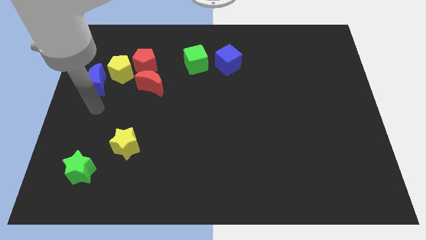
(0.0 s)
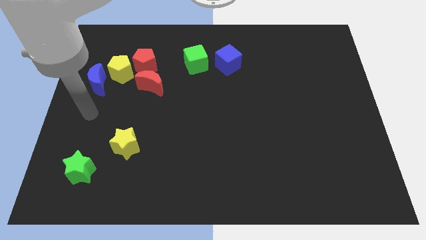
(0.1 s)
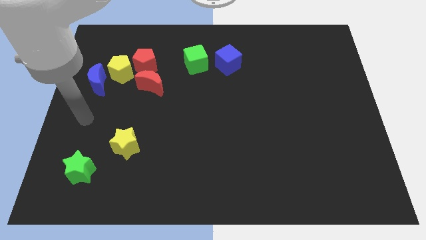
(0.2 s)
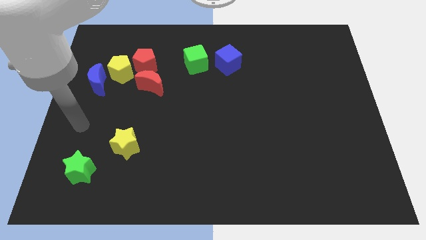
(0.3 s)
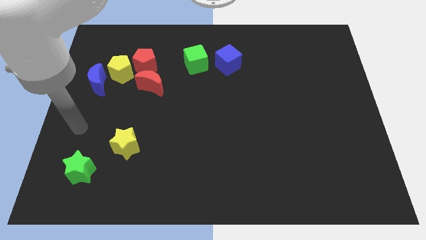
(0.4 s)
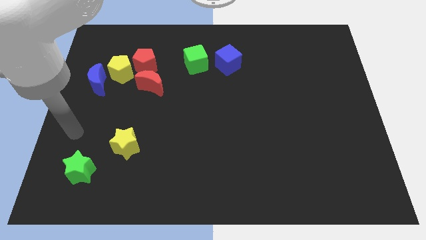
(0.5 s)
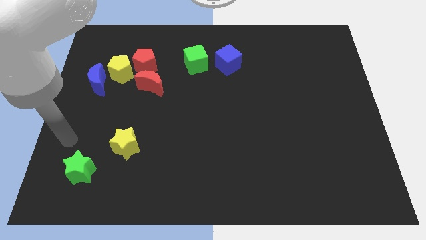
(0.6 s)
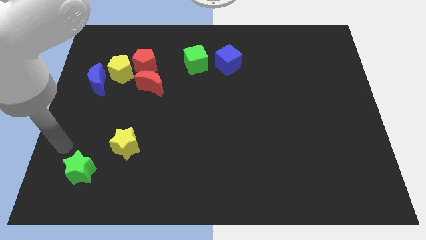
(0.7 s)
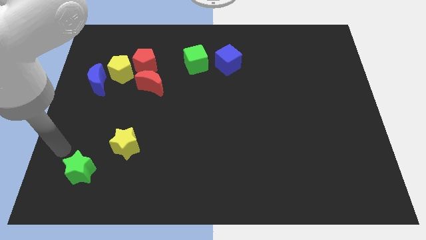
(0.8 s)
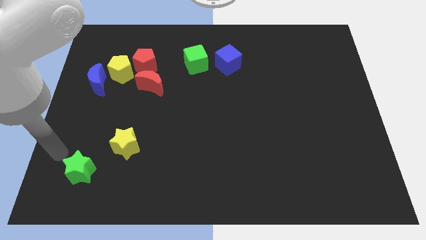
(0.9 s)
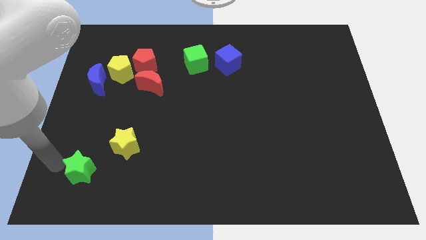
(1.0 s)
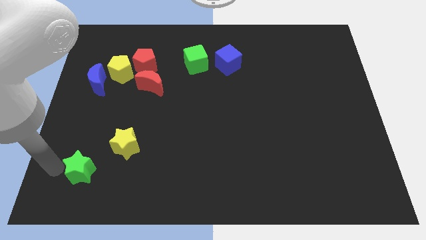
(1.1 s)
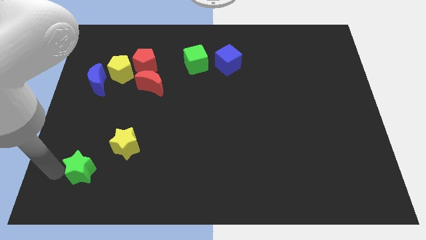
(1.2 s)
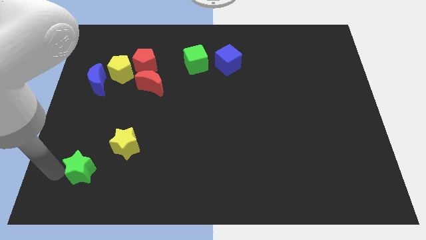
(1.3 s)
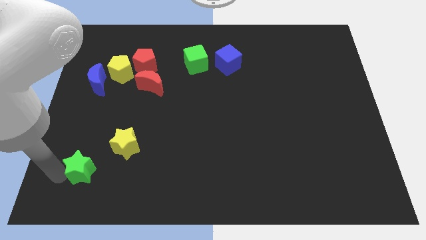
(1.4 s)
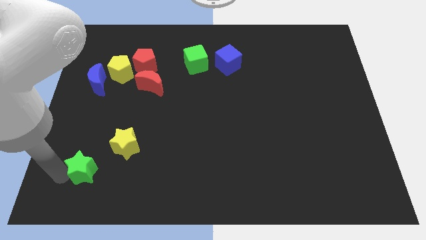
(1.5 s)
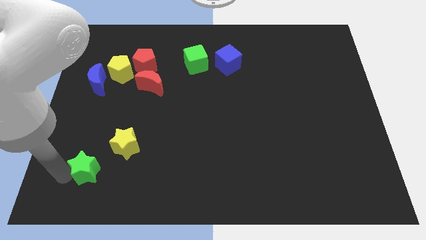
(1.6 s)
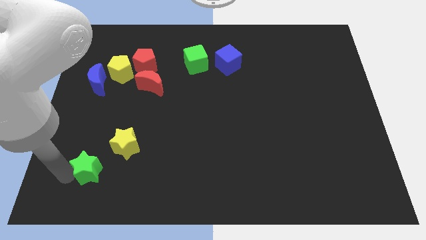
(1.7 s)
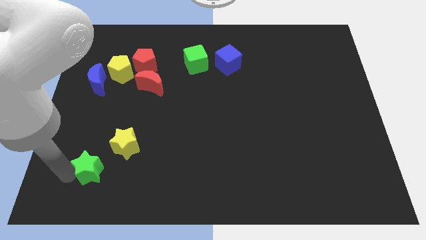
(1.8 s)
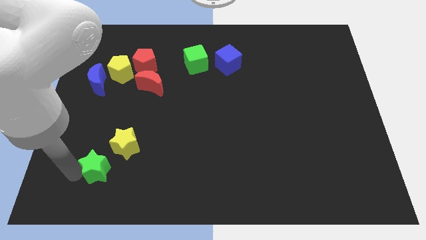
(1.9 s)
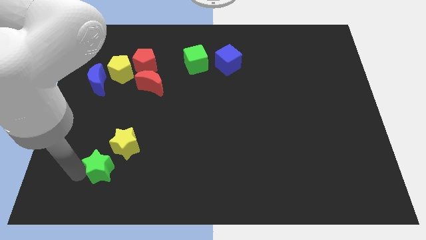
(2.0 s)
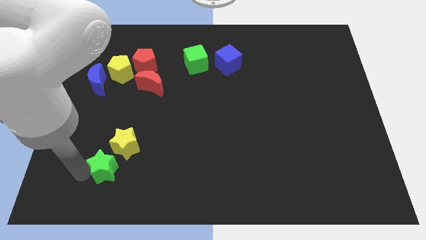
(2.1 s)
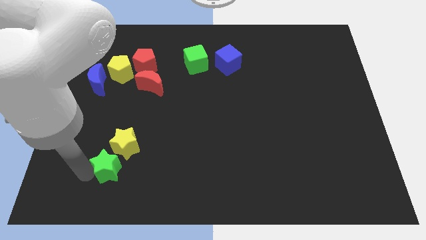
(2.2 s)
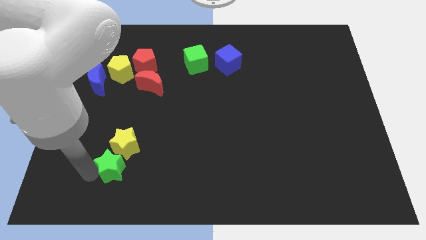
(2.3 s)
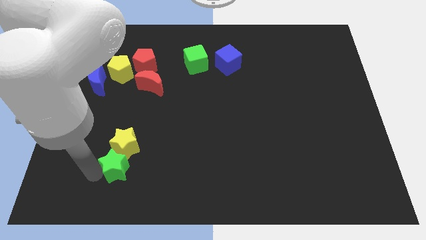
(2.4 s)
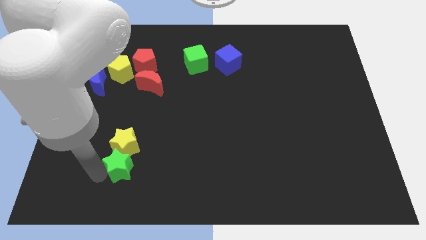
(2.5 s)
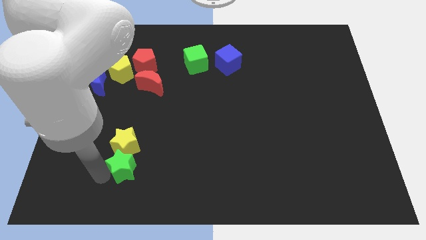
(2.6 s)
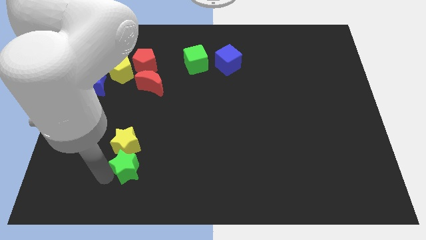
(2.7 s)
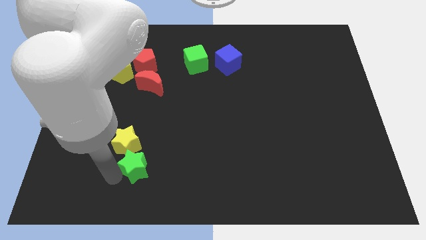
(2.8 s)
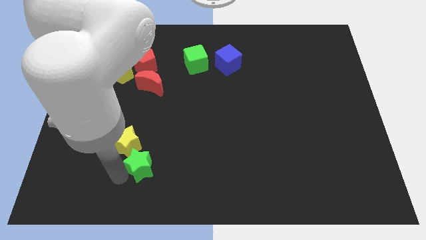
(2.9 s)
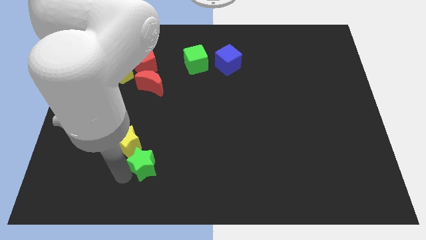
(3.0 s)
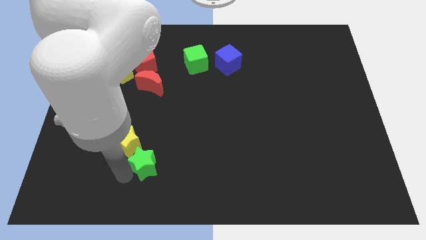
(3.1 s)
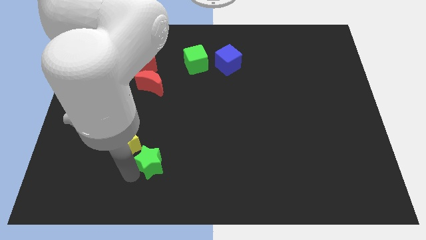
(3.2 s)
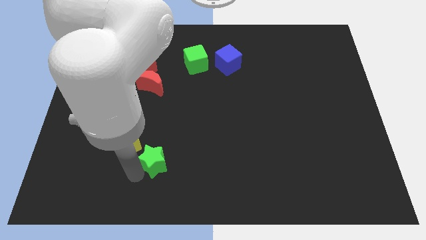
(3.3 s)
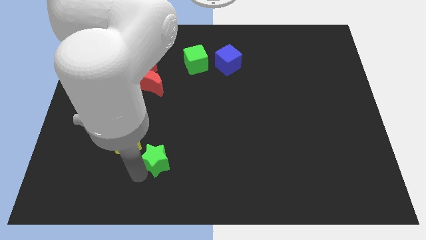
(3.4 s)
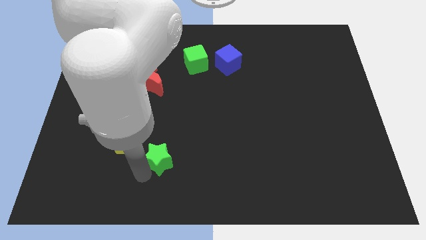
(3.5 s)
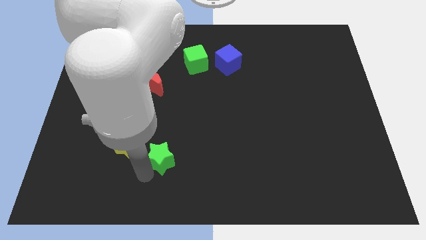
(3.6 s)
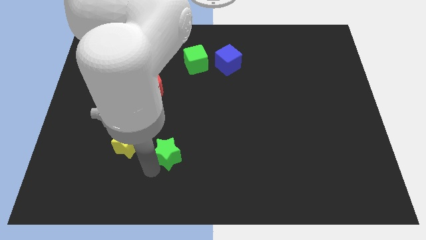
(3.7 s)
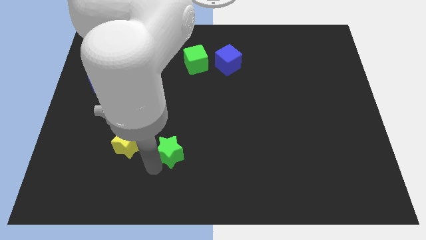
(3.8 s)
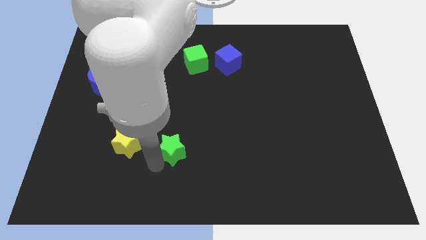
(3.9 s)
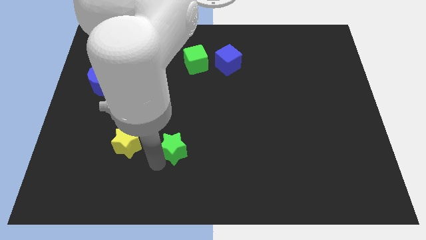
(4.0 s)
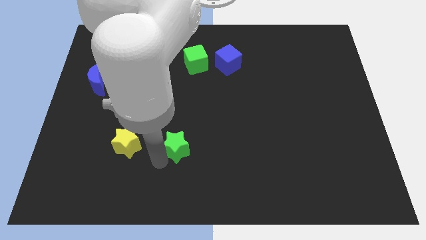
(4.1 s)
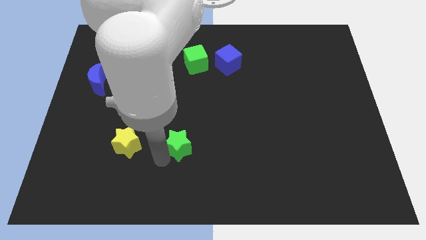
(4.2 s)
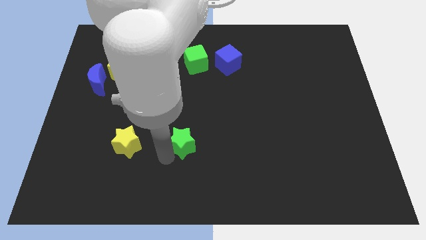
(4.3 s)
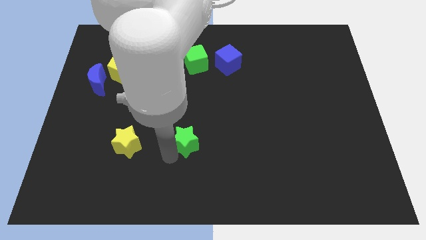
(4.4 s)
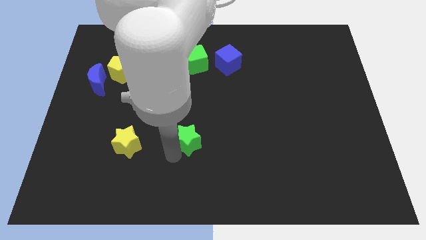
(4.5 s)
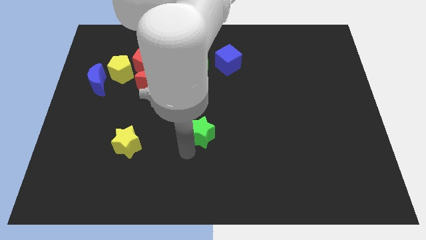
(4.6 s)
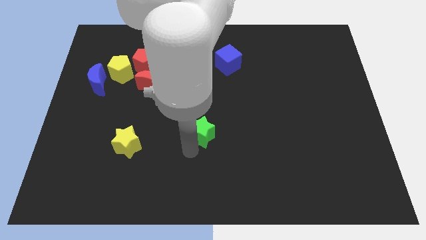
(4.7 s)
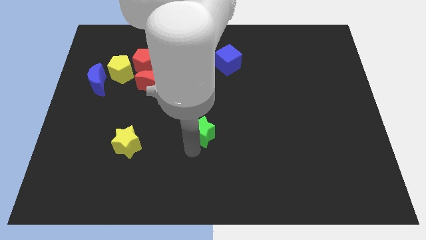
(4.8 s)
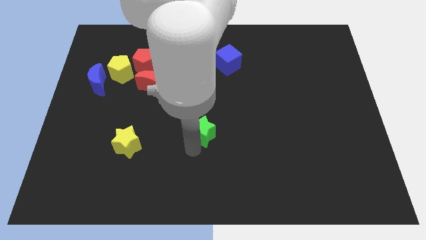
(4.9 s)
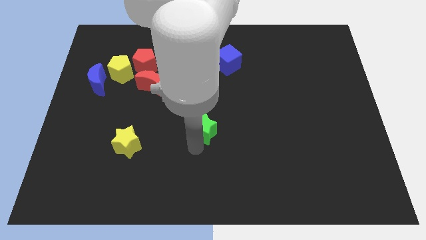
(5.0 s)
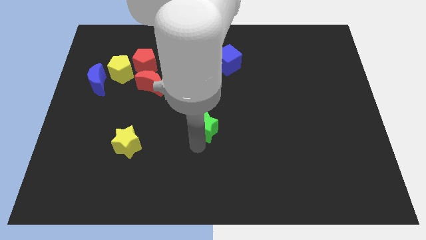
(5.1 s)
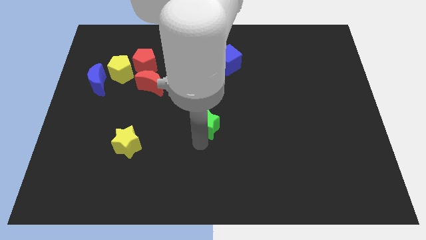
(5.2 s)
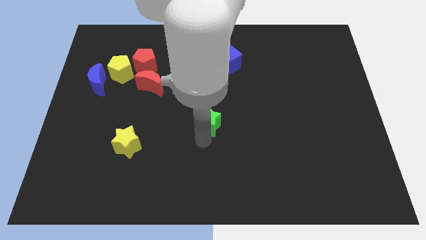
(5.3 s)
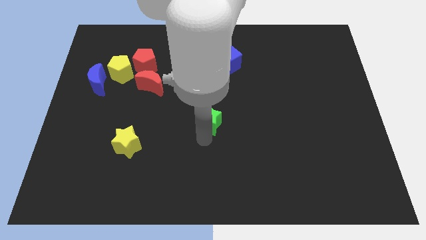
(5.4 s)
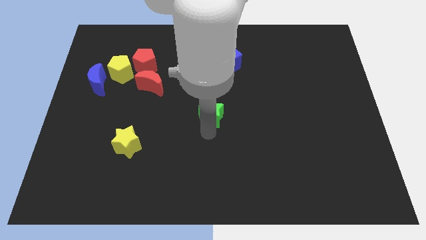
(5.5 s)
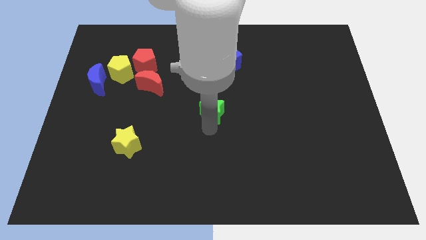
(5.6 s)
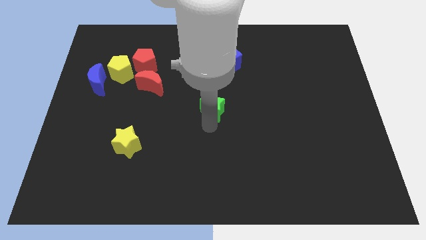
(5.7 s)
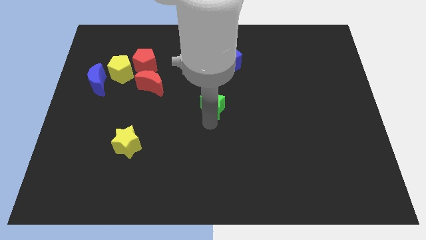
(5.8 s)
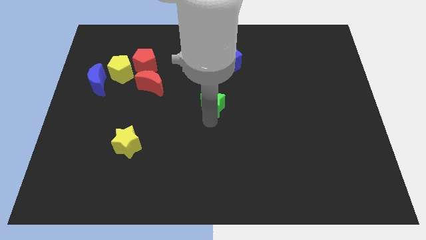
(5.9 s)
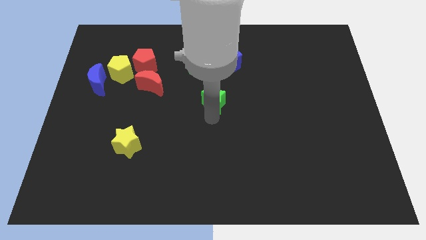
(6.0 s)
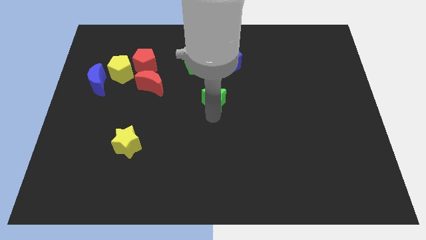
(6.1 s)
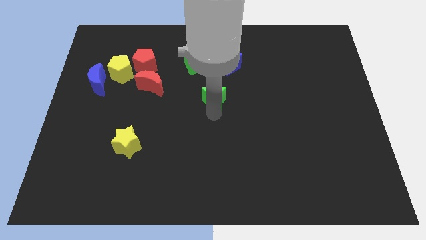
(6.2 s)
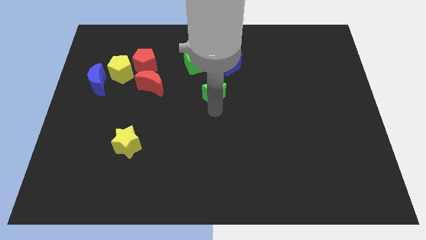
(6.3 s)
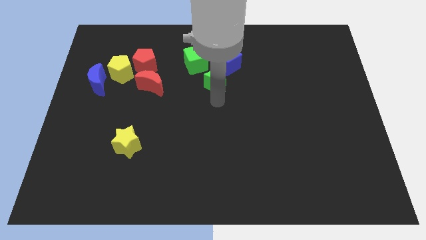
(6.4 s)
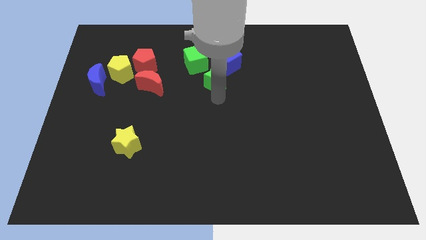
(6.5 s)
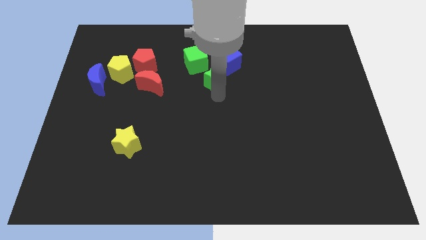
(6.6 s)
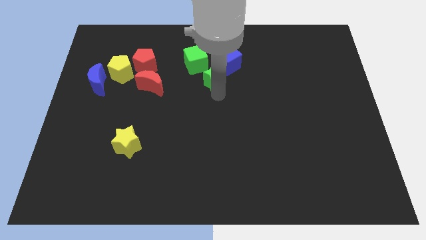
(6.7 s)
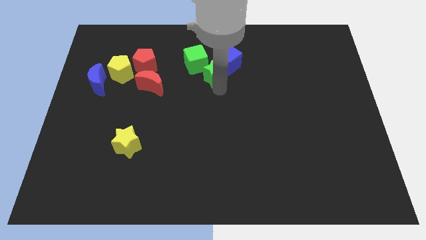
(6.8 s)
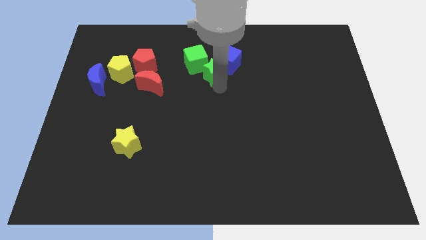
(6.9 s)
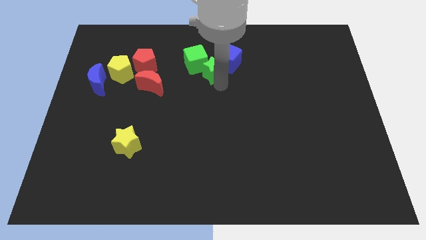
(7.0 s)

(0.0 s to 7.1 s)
move the green star to the blue cube

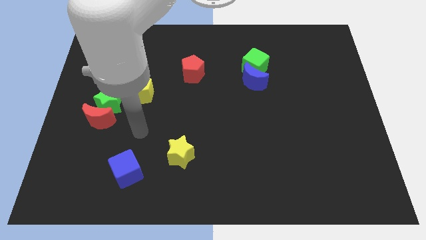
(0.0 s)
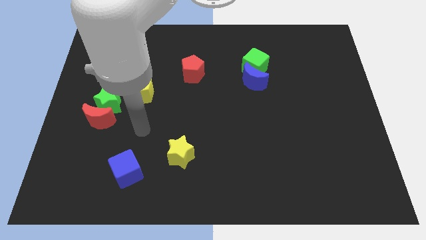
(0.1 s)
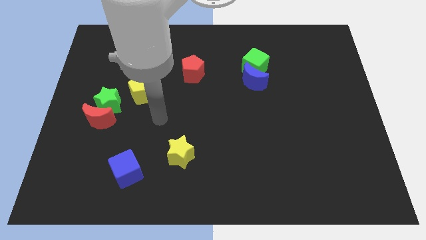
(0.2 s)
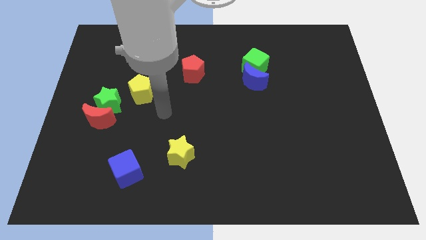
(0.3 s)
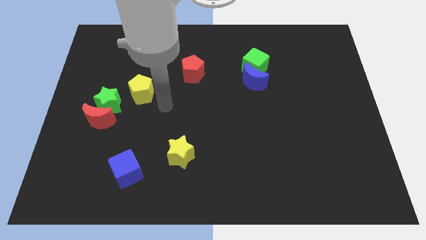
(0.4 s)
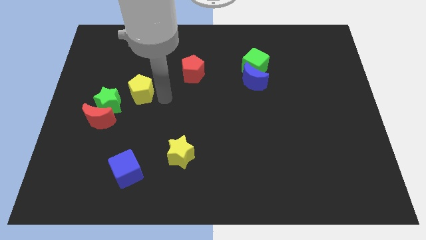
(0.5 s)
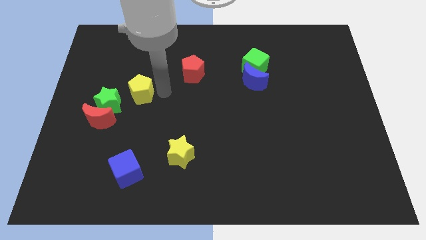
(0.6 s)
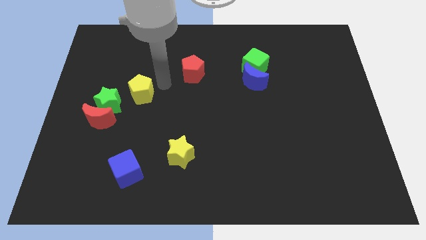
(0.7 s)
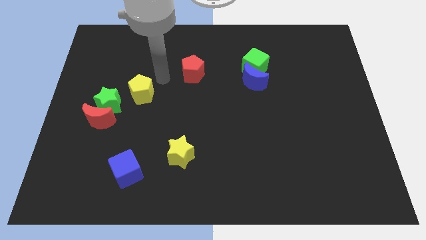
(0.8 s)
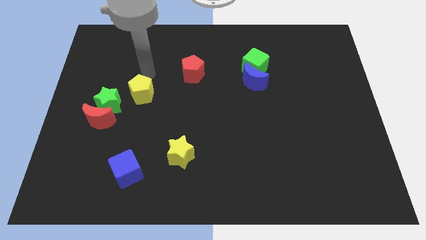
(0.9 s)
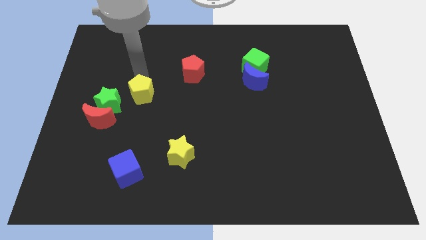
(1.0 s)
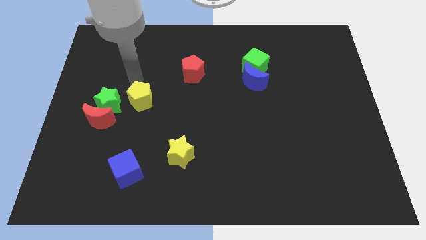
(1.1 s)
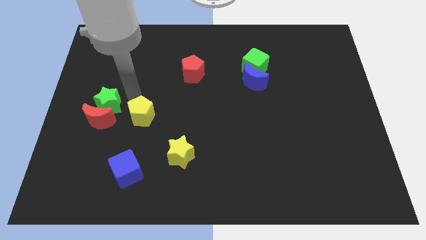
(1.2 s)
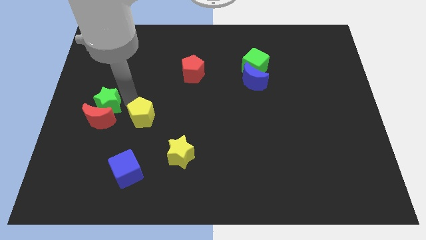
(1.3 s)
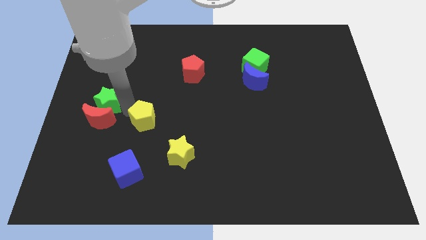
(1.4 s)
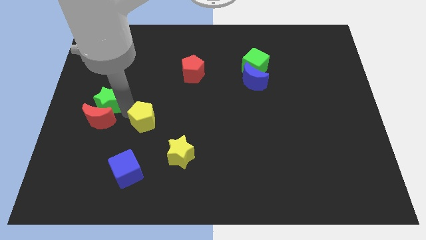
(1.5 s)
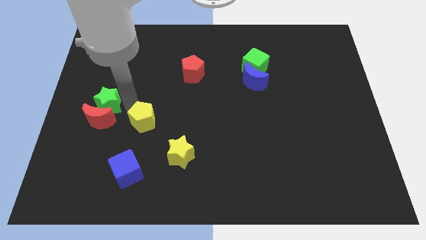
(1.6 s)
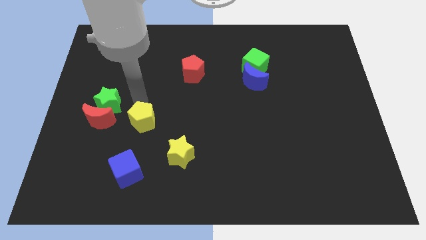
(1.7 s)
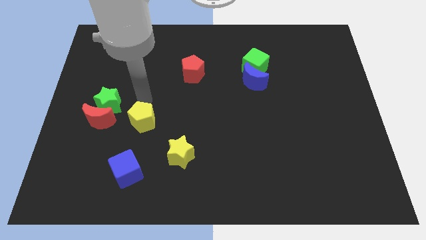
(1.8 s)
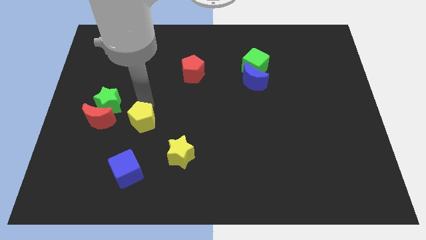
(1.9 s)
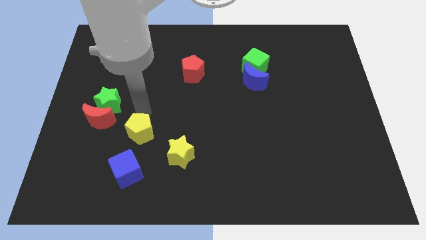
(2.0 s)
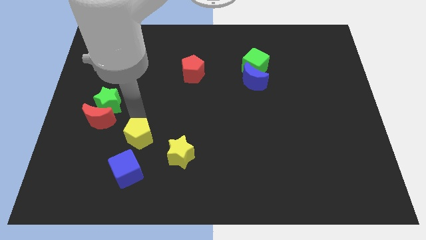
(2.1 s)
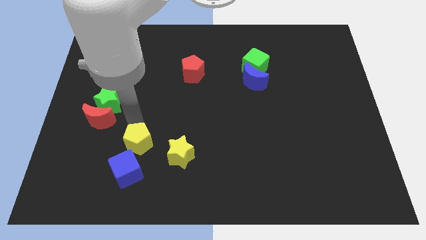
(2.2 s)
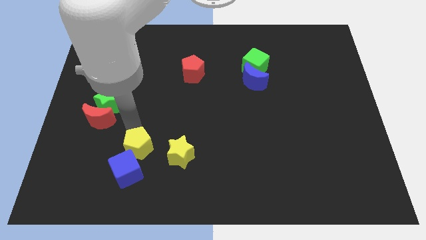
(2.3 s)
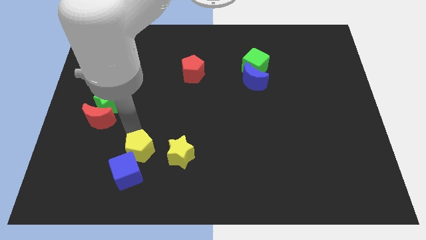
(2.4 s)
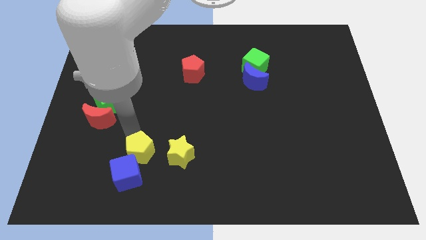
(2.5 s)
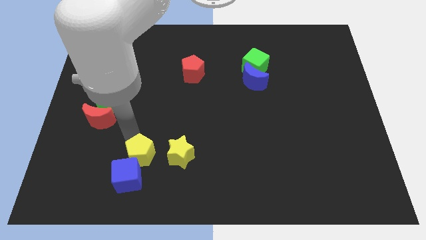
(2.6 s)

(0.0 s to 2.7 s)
move the yellow pentagon close to the blue cube
